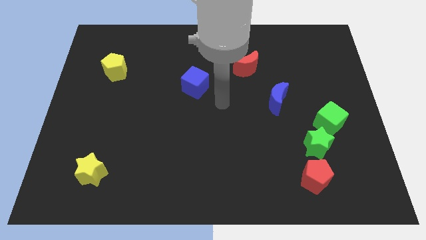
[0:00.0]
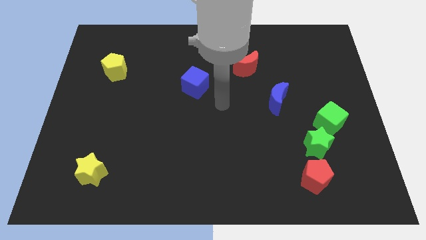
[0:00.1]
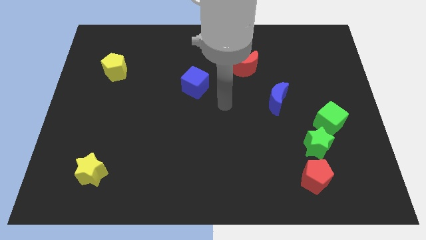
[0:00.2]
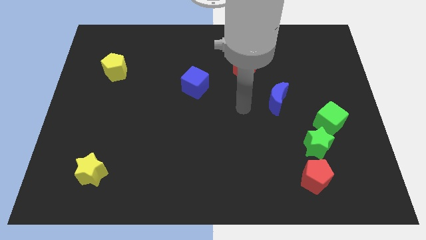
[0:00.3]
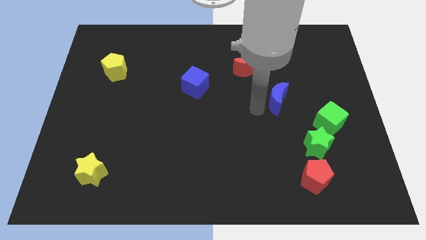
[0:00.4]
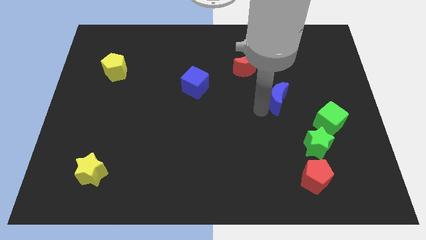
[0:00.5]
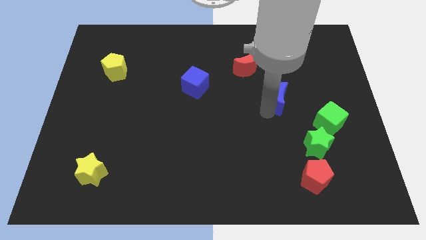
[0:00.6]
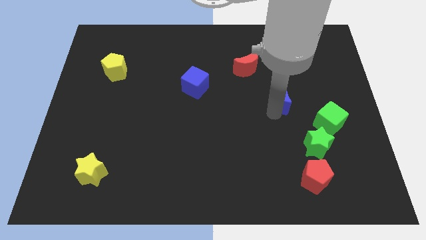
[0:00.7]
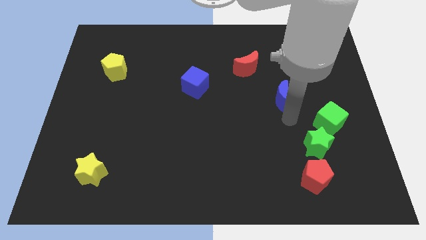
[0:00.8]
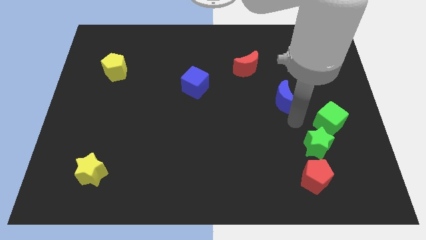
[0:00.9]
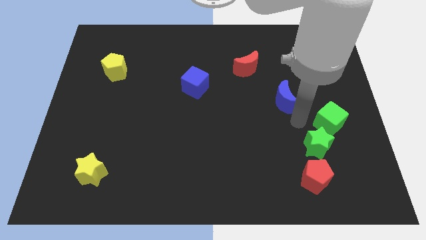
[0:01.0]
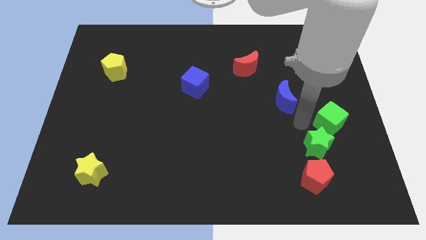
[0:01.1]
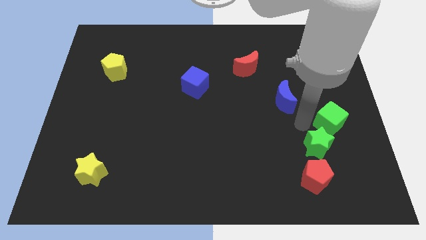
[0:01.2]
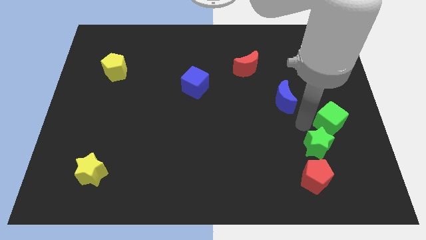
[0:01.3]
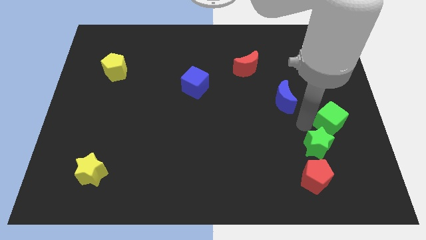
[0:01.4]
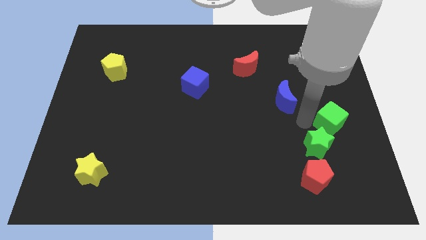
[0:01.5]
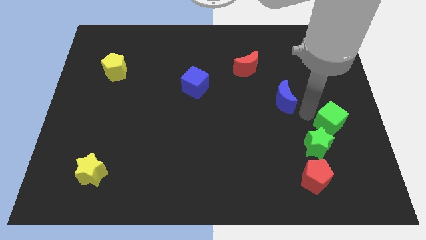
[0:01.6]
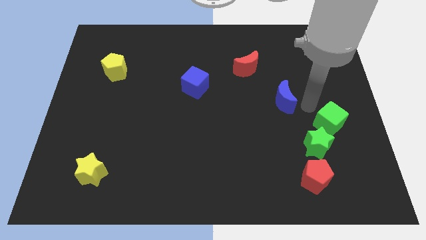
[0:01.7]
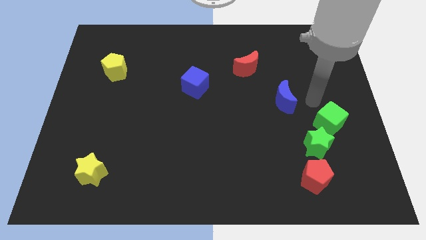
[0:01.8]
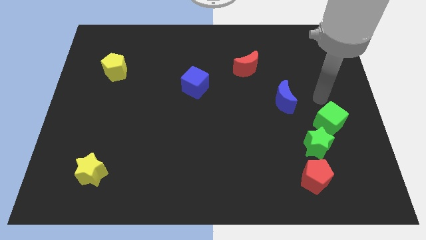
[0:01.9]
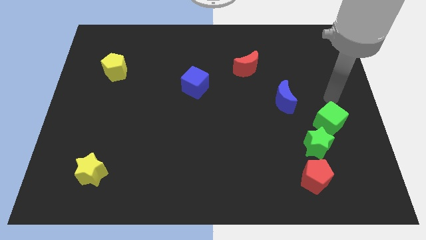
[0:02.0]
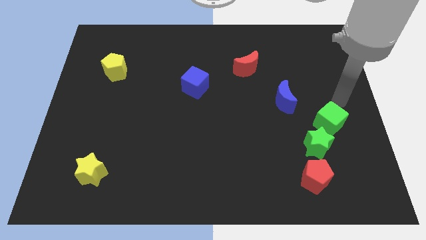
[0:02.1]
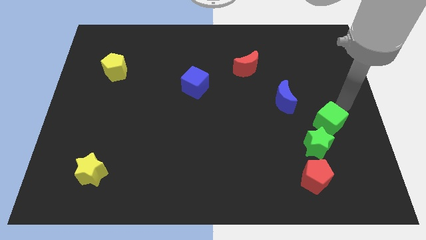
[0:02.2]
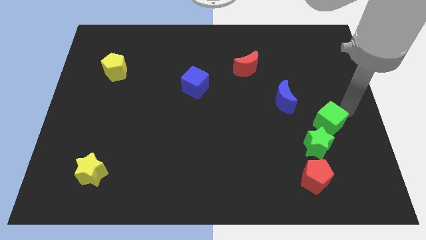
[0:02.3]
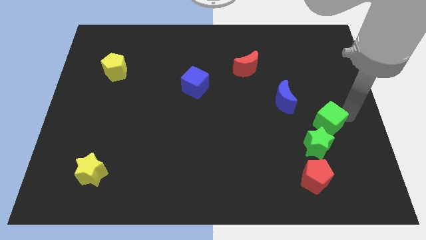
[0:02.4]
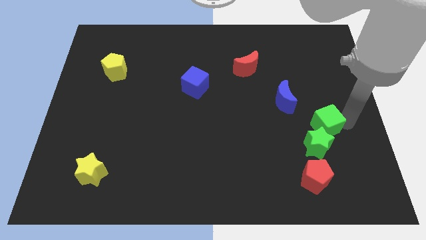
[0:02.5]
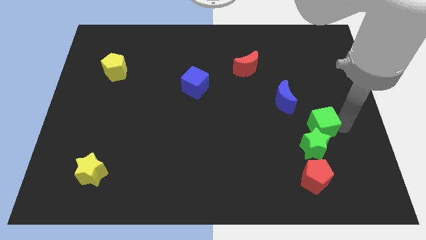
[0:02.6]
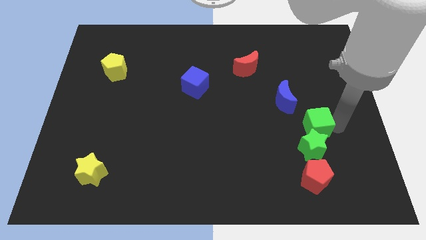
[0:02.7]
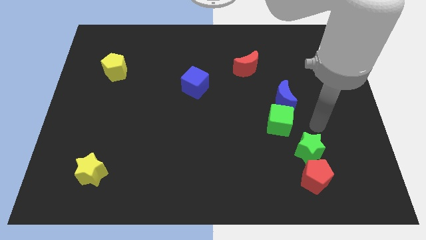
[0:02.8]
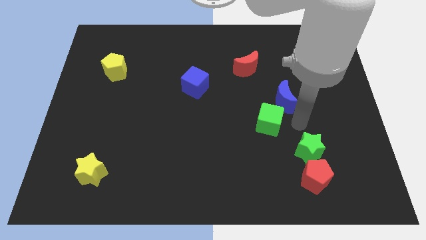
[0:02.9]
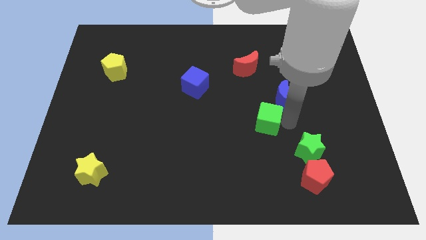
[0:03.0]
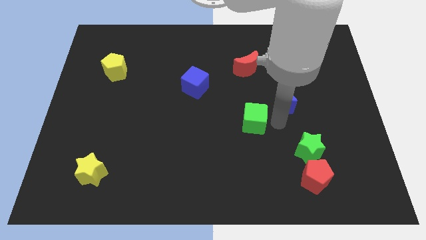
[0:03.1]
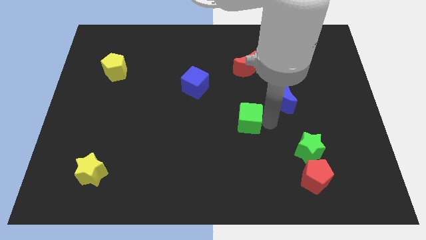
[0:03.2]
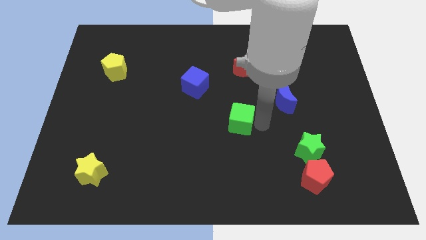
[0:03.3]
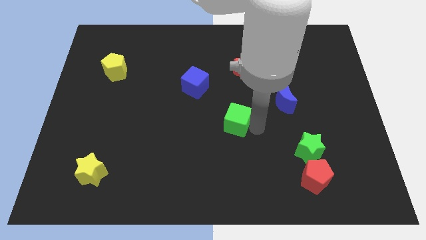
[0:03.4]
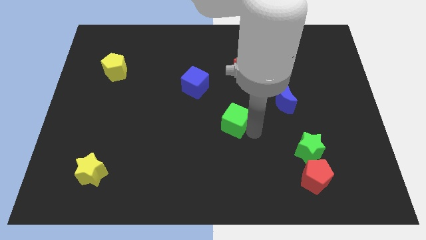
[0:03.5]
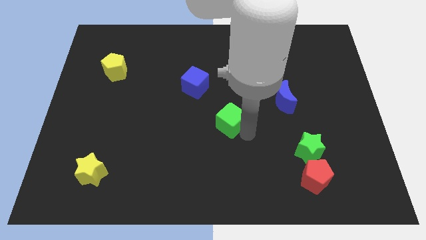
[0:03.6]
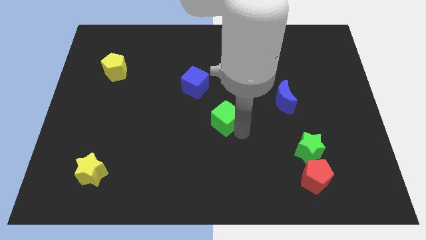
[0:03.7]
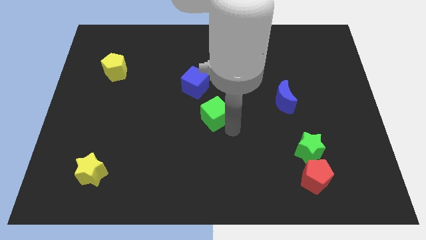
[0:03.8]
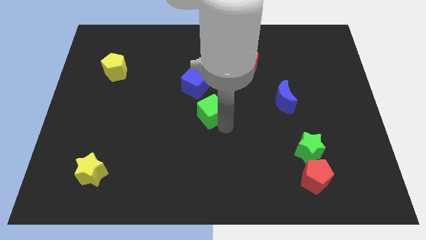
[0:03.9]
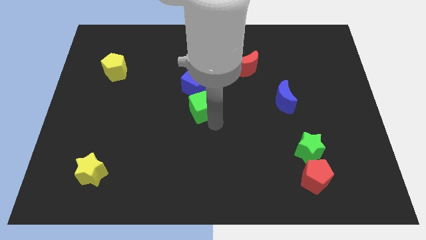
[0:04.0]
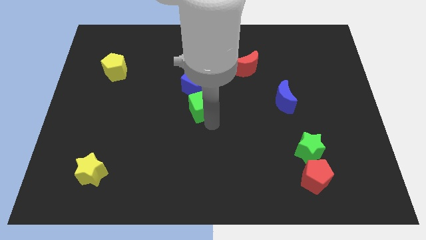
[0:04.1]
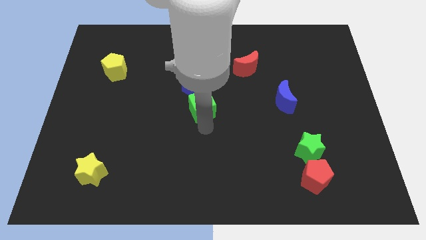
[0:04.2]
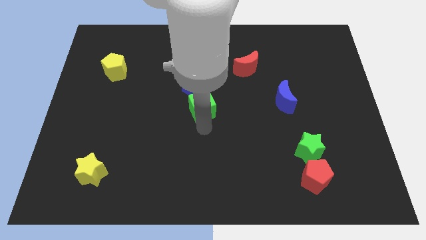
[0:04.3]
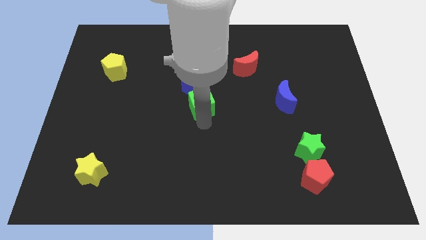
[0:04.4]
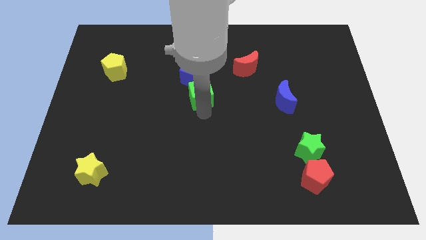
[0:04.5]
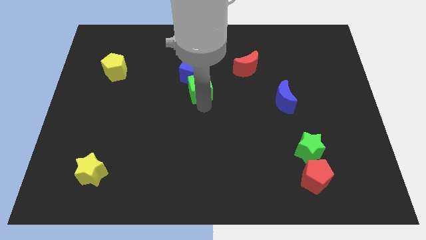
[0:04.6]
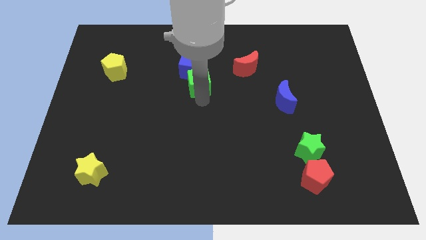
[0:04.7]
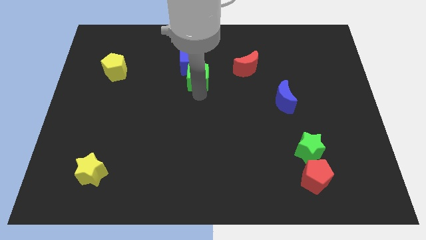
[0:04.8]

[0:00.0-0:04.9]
push the green cube close to the blue cube

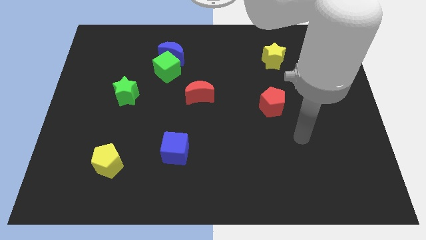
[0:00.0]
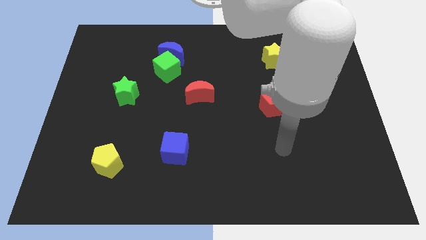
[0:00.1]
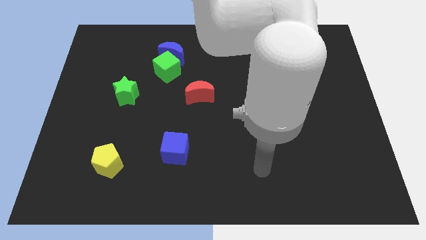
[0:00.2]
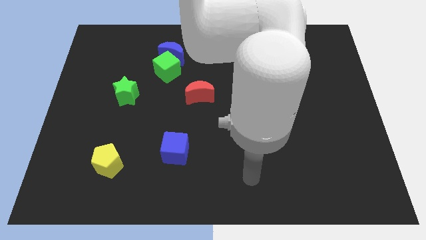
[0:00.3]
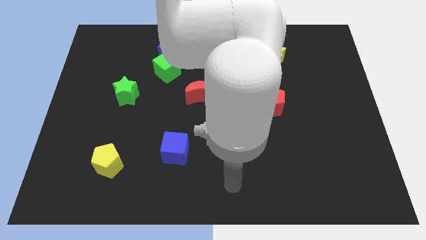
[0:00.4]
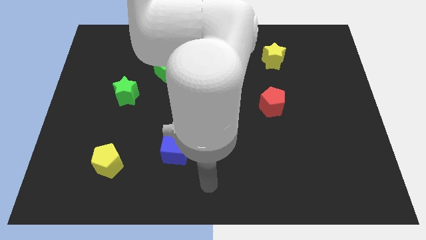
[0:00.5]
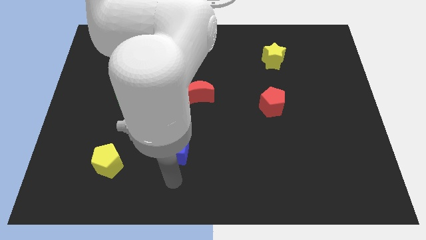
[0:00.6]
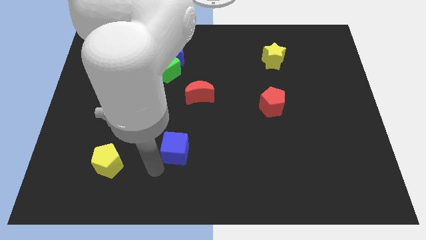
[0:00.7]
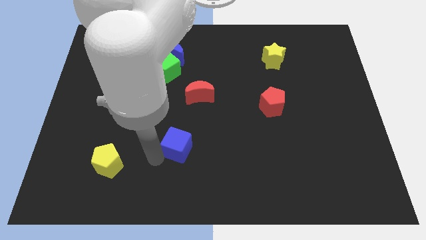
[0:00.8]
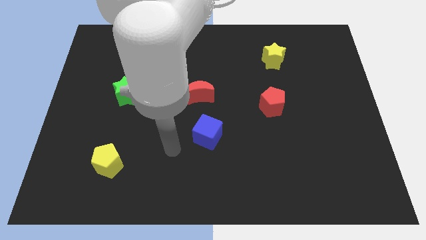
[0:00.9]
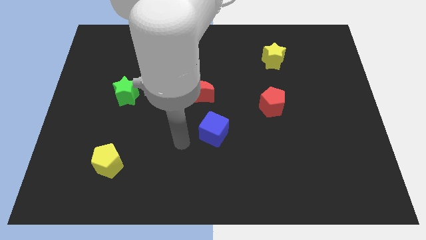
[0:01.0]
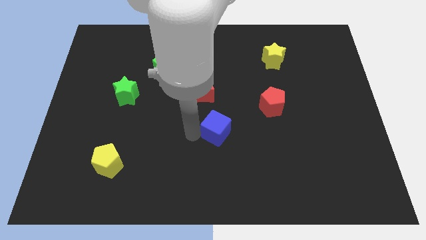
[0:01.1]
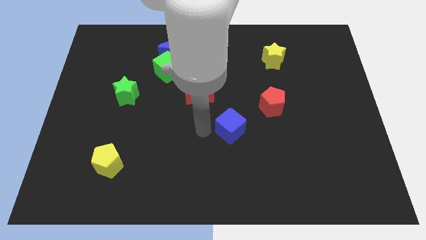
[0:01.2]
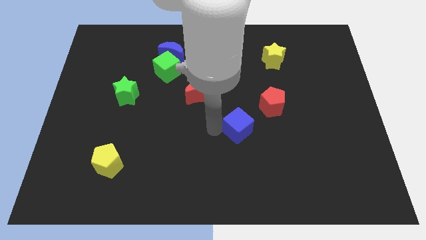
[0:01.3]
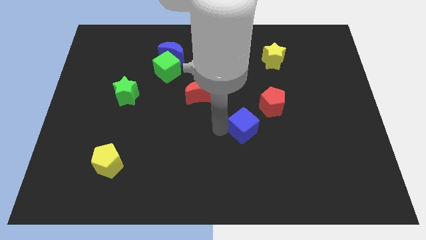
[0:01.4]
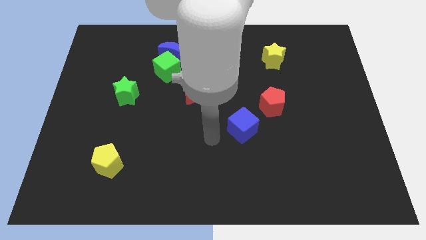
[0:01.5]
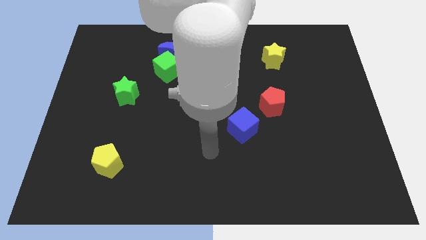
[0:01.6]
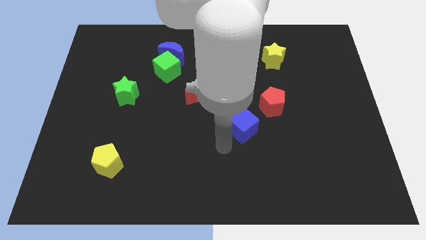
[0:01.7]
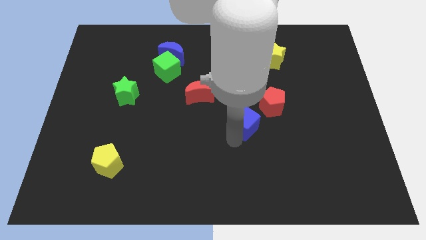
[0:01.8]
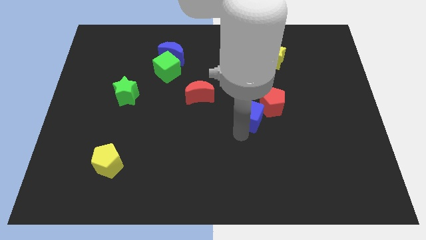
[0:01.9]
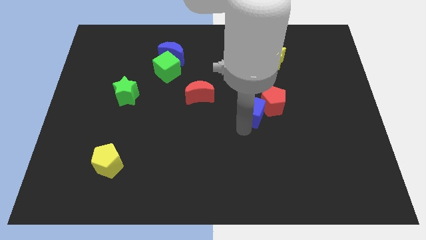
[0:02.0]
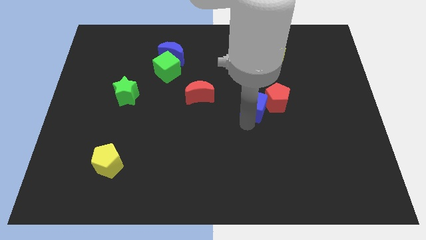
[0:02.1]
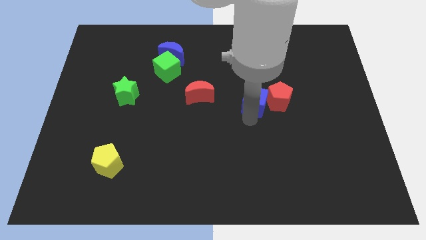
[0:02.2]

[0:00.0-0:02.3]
put the blue cube close to the red pentagon

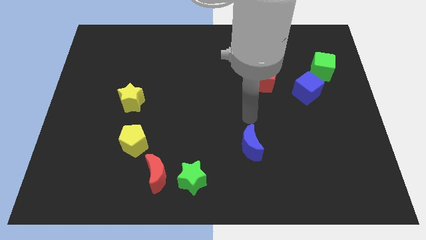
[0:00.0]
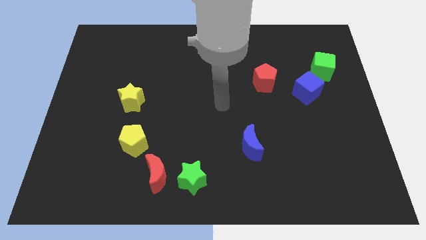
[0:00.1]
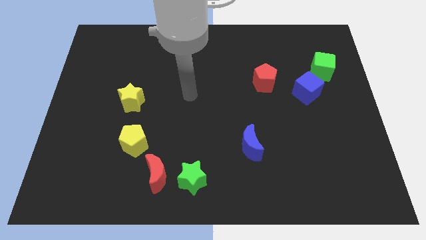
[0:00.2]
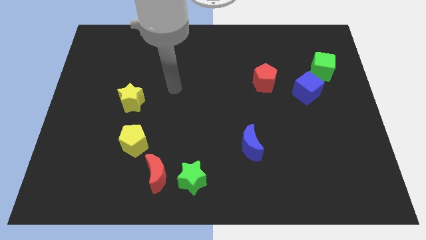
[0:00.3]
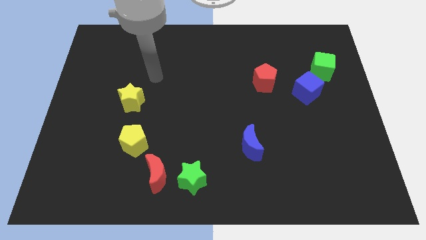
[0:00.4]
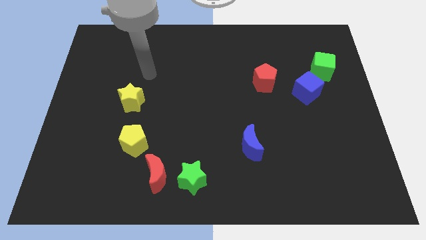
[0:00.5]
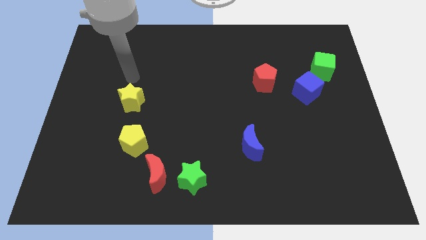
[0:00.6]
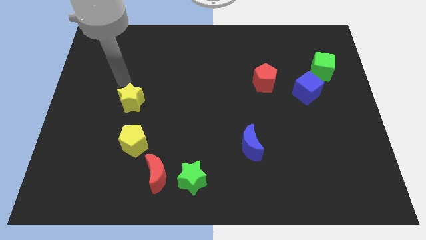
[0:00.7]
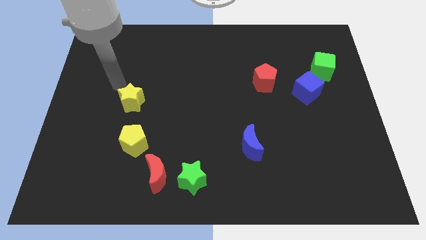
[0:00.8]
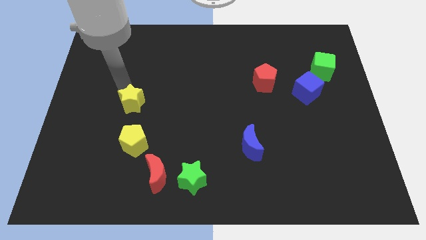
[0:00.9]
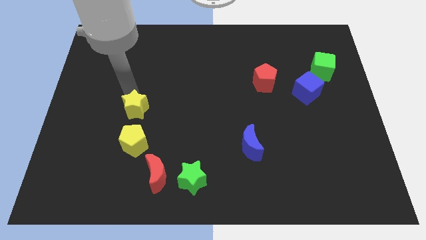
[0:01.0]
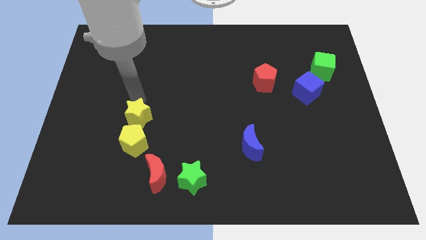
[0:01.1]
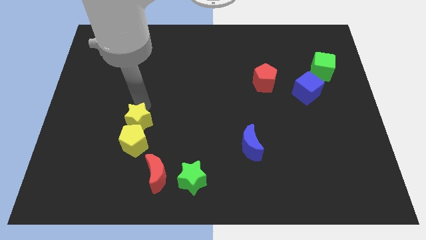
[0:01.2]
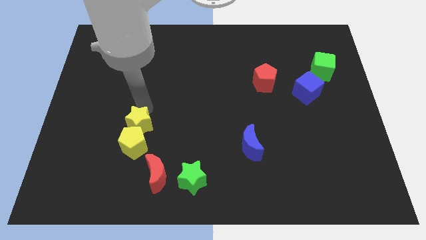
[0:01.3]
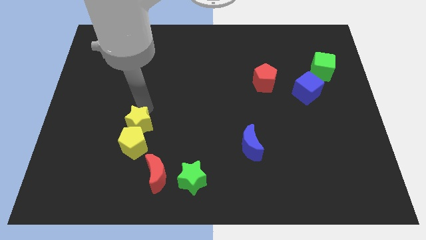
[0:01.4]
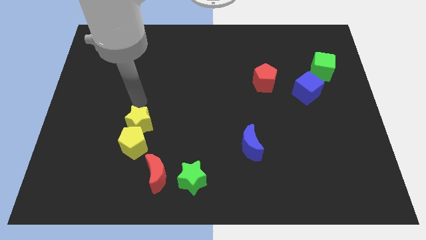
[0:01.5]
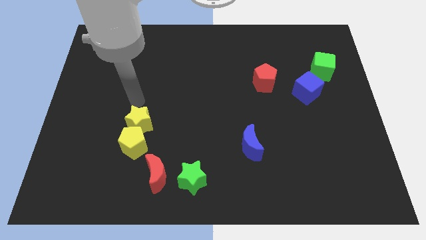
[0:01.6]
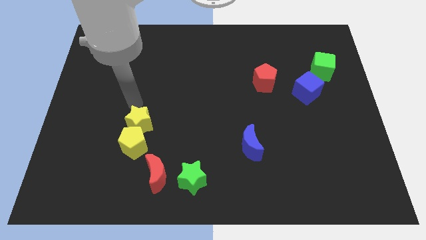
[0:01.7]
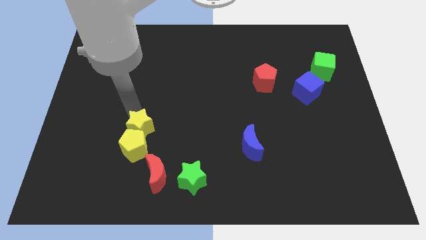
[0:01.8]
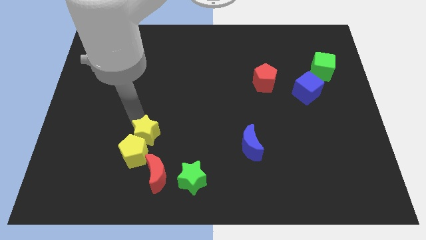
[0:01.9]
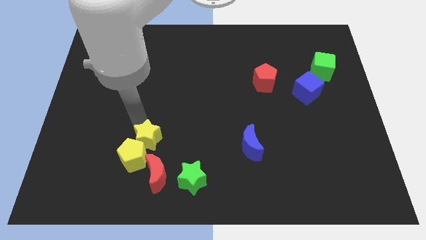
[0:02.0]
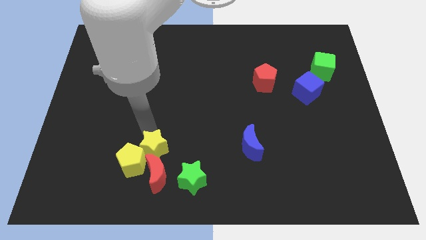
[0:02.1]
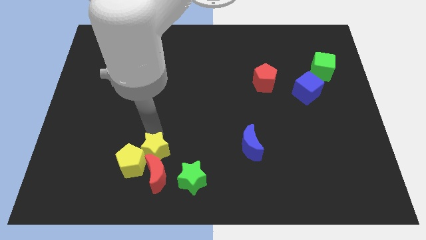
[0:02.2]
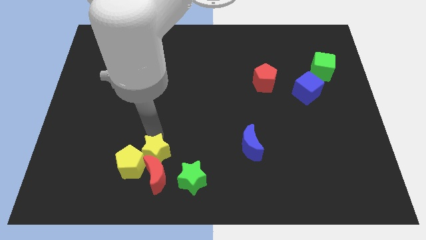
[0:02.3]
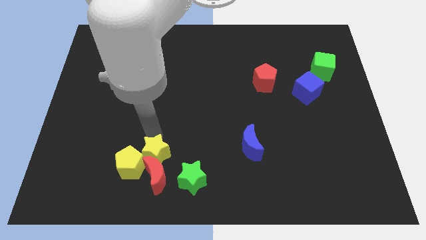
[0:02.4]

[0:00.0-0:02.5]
slide the yellow star to the red moon
